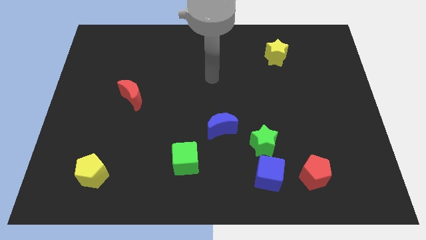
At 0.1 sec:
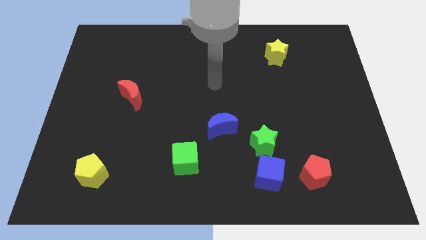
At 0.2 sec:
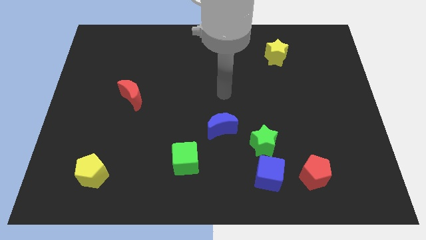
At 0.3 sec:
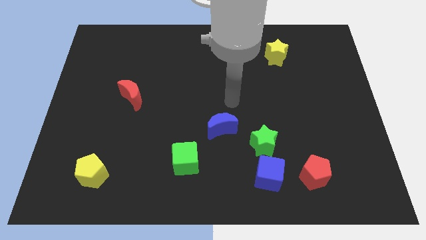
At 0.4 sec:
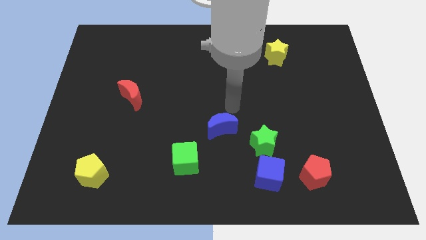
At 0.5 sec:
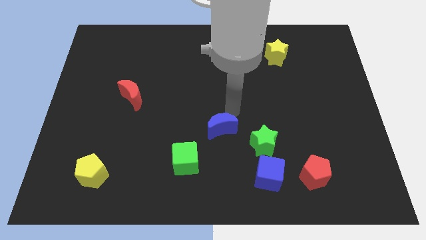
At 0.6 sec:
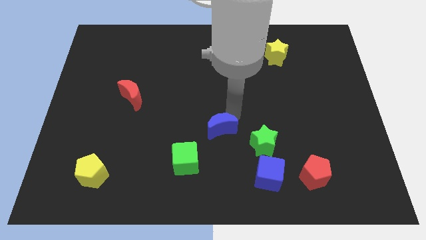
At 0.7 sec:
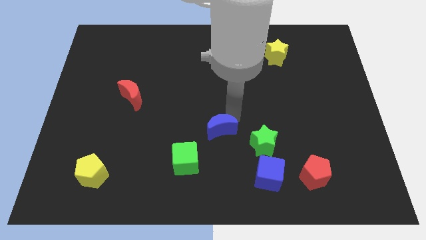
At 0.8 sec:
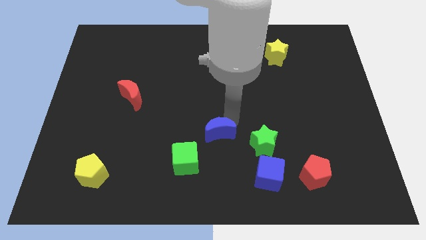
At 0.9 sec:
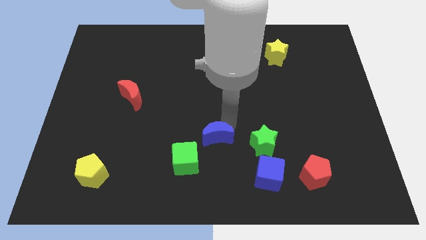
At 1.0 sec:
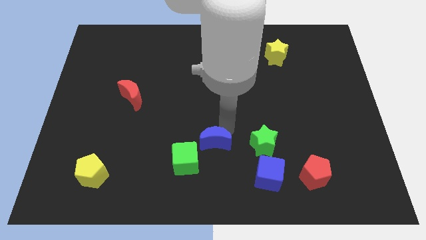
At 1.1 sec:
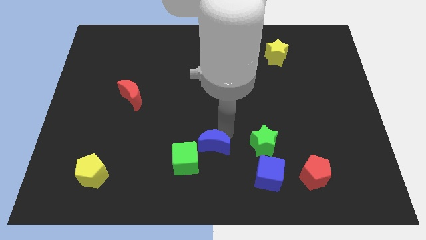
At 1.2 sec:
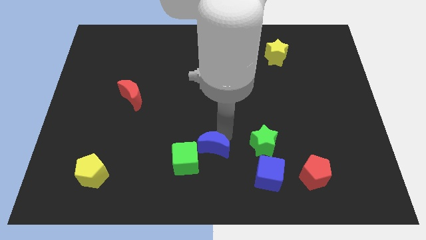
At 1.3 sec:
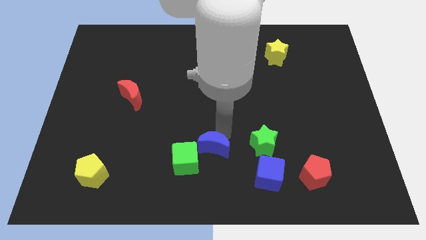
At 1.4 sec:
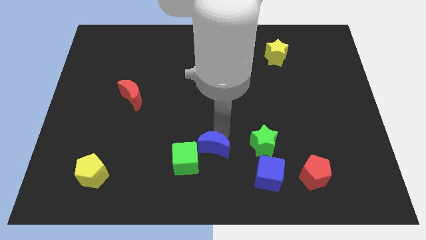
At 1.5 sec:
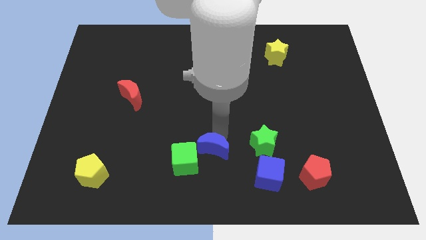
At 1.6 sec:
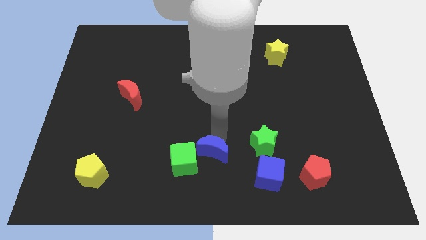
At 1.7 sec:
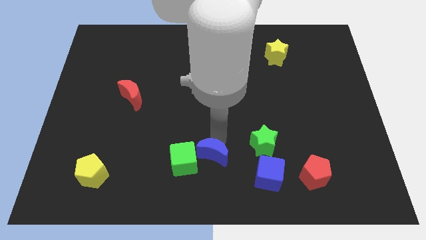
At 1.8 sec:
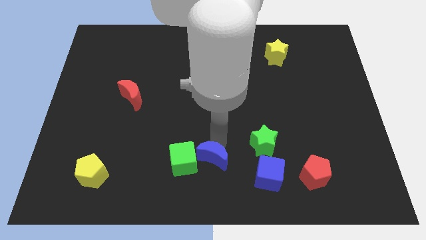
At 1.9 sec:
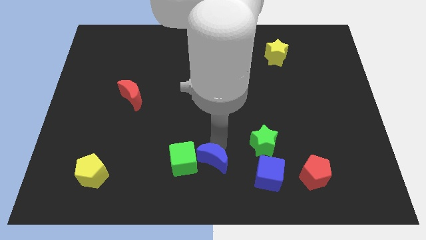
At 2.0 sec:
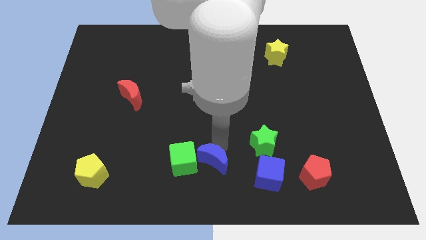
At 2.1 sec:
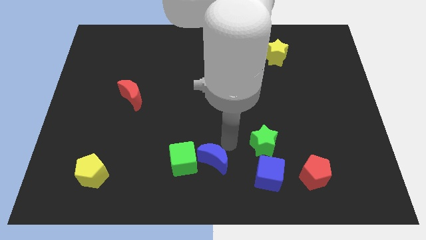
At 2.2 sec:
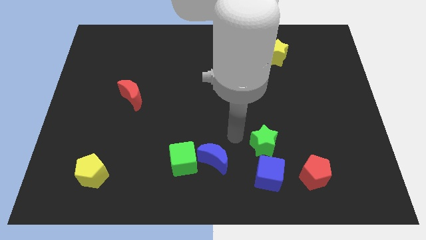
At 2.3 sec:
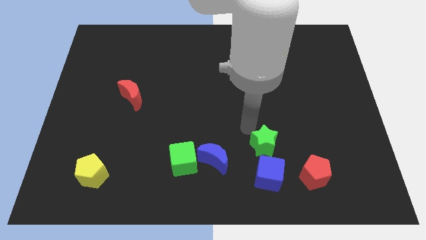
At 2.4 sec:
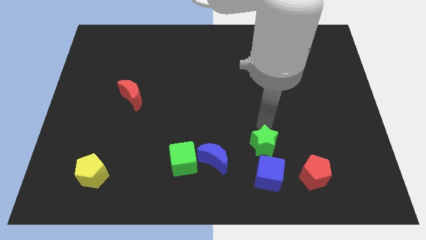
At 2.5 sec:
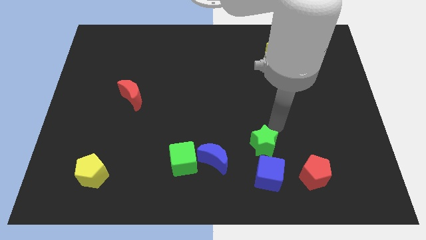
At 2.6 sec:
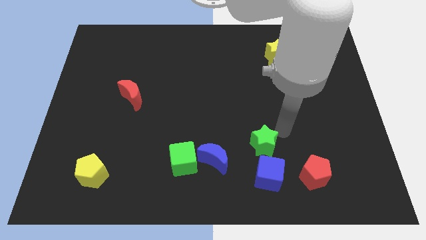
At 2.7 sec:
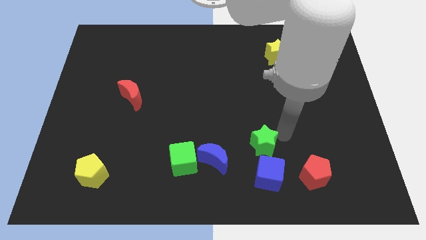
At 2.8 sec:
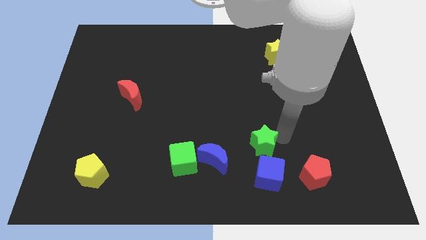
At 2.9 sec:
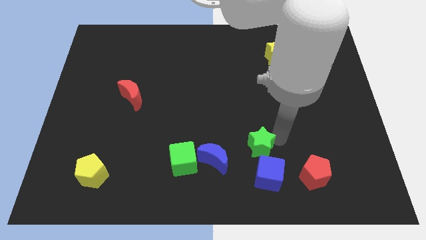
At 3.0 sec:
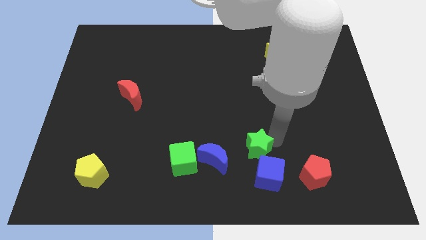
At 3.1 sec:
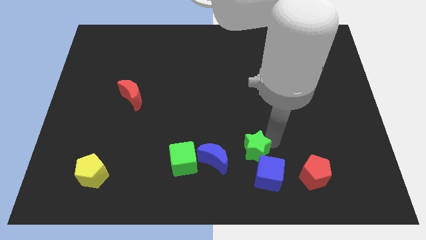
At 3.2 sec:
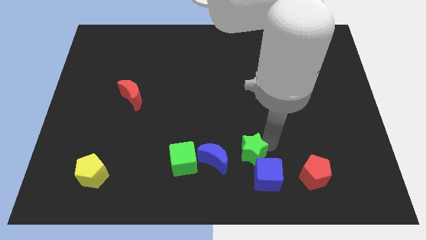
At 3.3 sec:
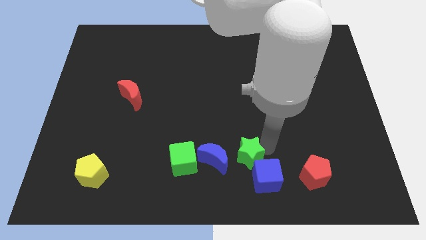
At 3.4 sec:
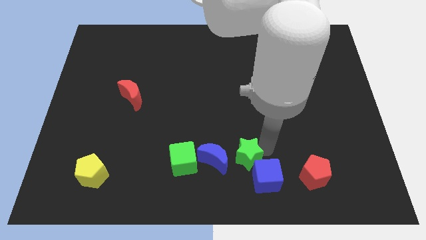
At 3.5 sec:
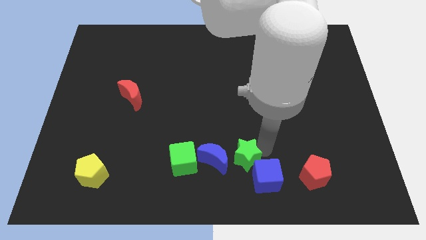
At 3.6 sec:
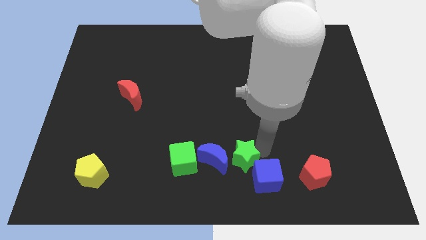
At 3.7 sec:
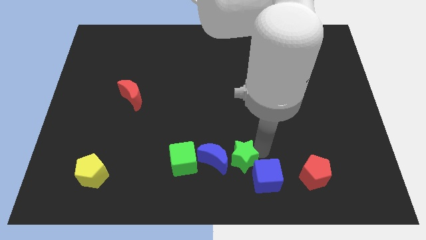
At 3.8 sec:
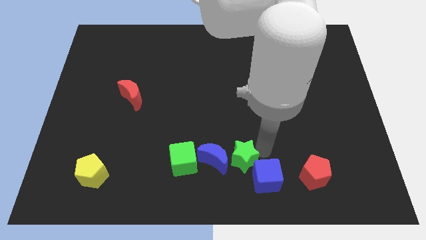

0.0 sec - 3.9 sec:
move the green star and the blue crescent parallel to each other

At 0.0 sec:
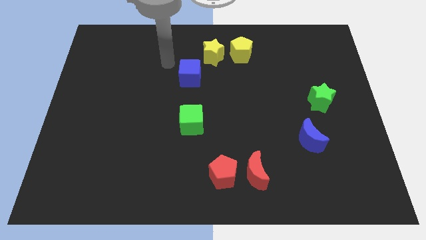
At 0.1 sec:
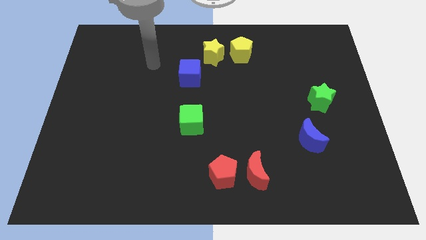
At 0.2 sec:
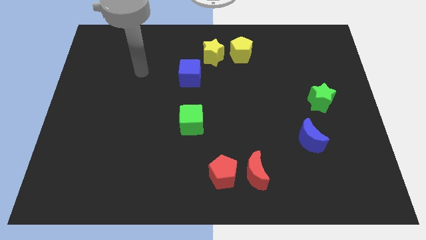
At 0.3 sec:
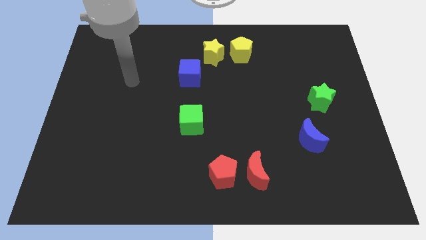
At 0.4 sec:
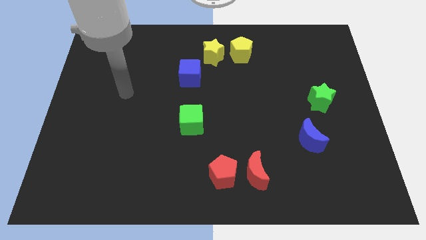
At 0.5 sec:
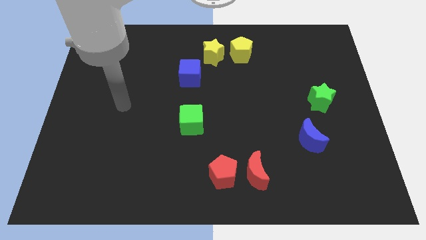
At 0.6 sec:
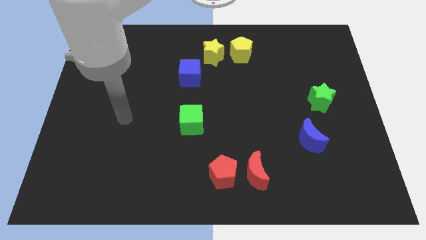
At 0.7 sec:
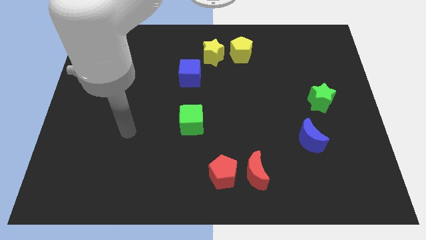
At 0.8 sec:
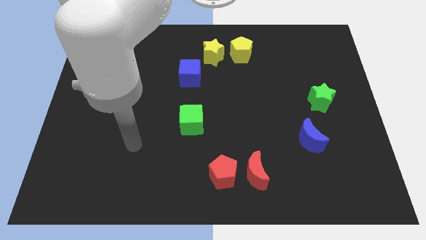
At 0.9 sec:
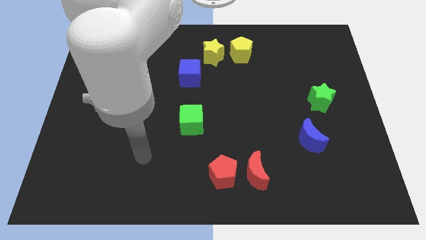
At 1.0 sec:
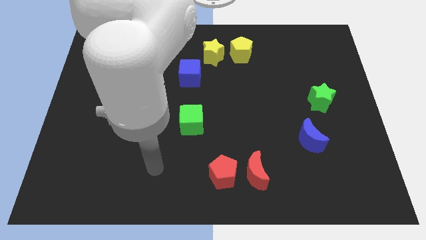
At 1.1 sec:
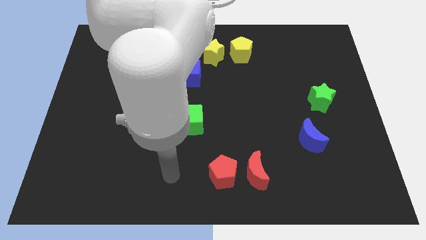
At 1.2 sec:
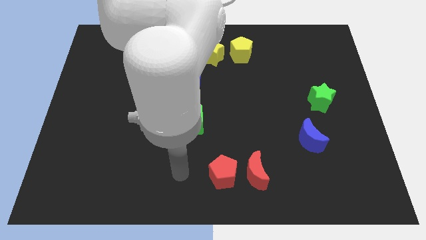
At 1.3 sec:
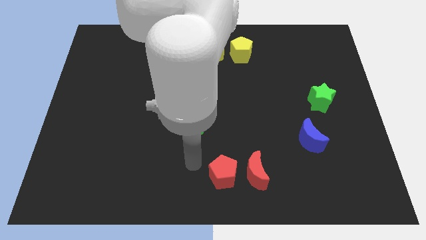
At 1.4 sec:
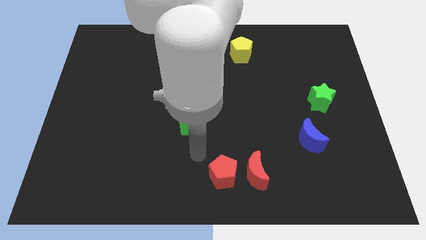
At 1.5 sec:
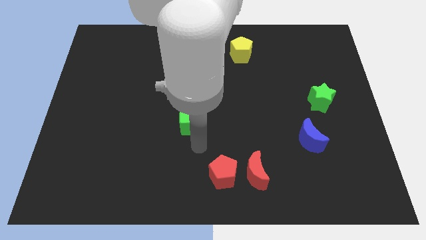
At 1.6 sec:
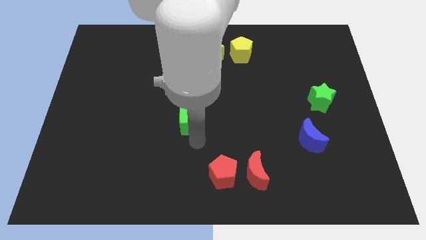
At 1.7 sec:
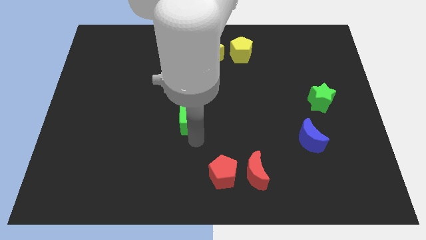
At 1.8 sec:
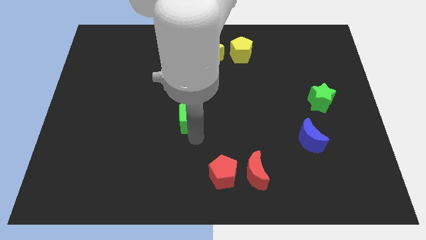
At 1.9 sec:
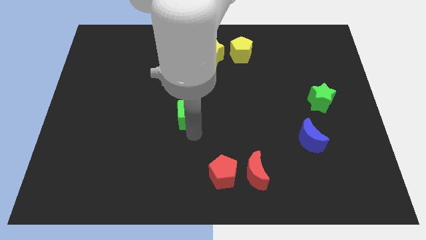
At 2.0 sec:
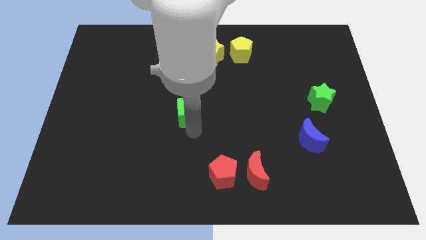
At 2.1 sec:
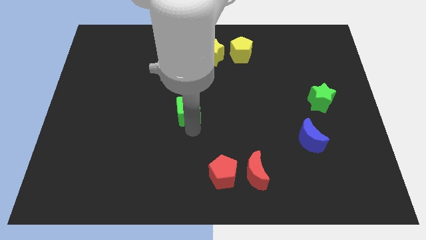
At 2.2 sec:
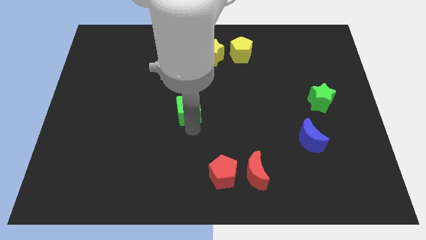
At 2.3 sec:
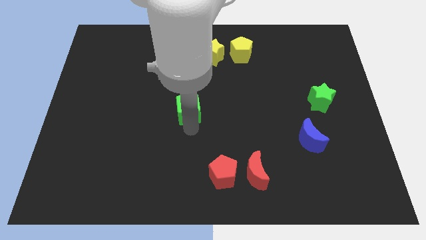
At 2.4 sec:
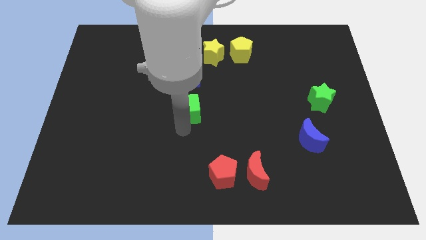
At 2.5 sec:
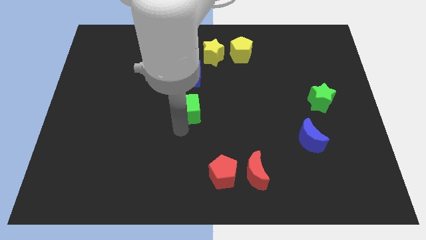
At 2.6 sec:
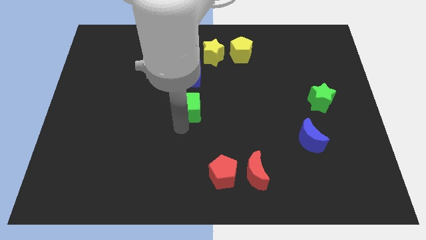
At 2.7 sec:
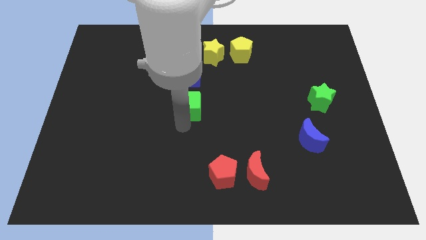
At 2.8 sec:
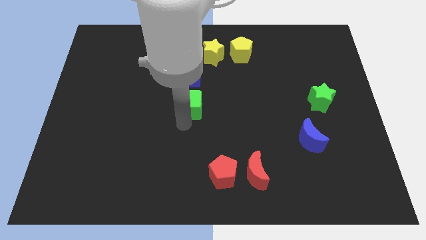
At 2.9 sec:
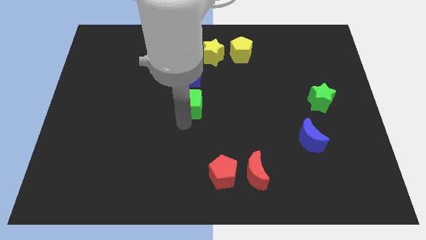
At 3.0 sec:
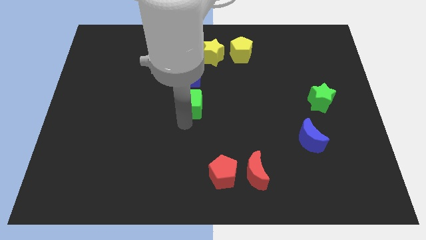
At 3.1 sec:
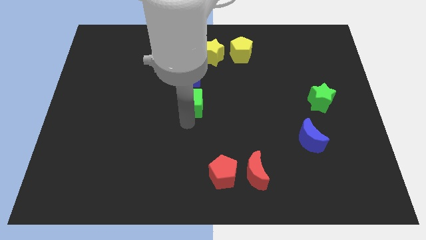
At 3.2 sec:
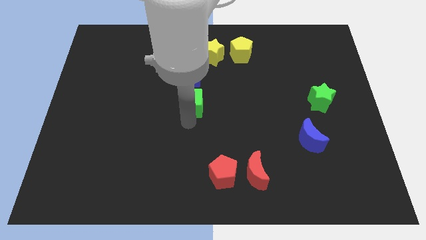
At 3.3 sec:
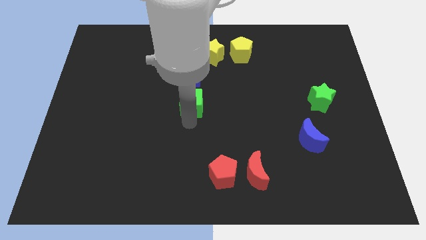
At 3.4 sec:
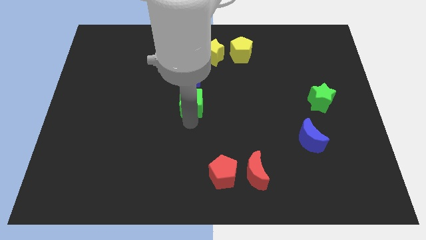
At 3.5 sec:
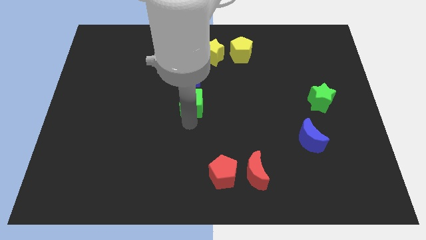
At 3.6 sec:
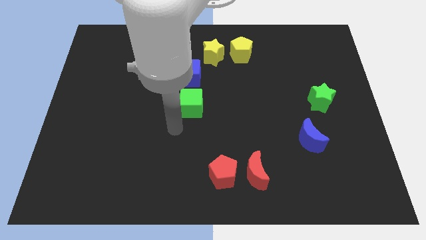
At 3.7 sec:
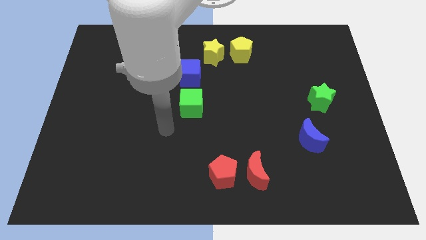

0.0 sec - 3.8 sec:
push the green cube below the blue cube

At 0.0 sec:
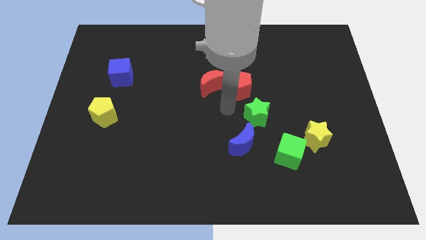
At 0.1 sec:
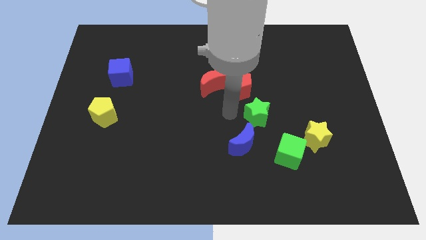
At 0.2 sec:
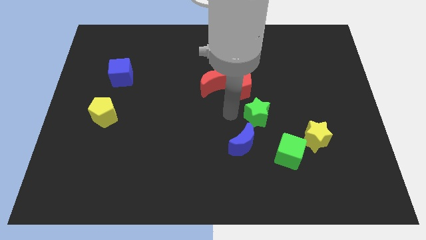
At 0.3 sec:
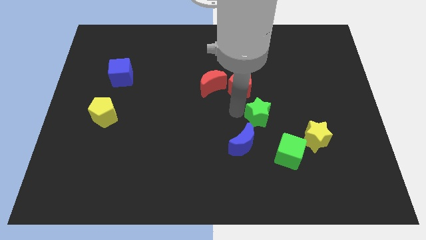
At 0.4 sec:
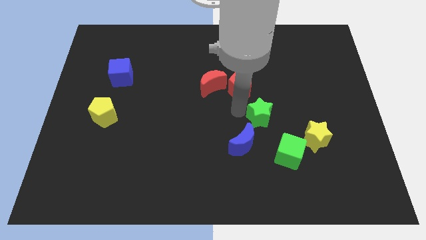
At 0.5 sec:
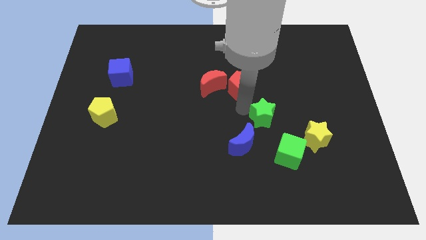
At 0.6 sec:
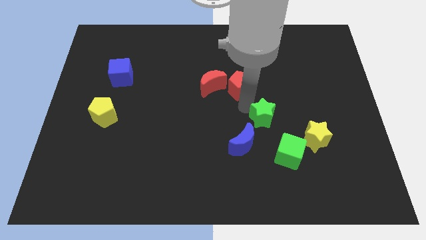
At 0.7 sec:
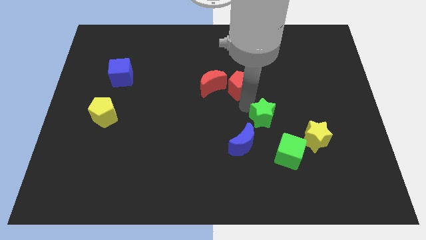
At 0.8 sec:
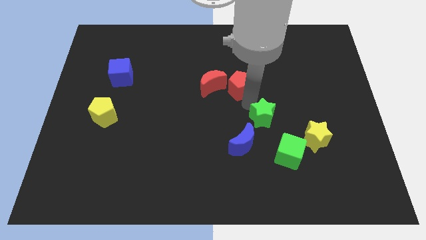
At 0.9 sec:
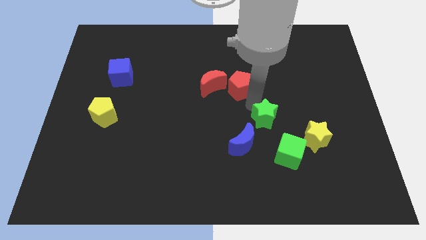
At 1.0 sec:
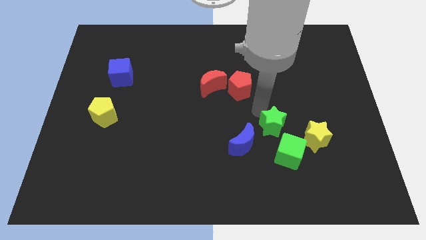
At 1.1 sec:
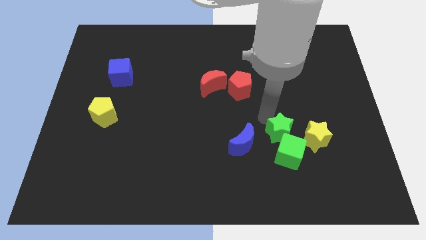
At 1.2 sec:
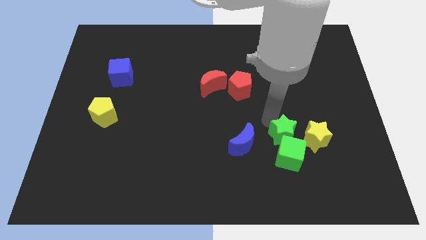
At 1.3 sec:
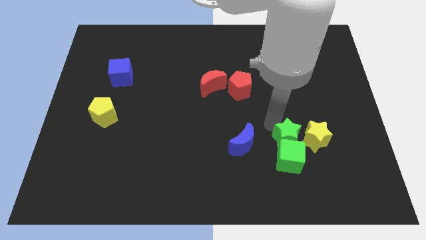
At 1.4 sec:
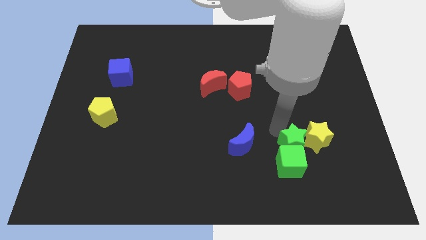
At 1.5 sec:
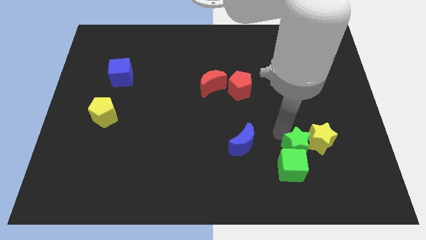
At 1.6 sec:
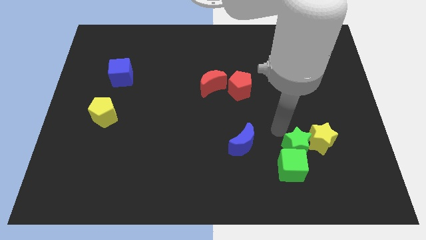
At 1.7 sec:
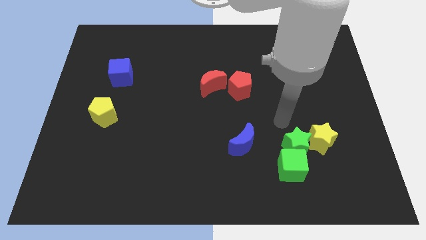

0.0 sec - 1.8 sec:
push green star into the green cube
